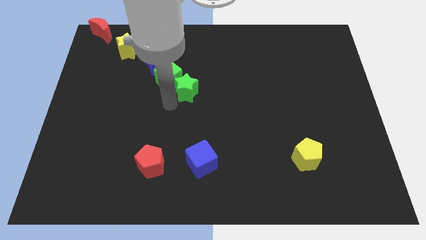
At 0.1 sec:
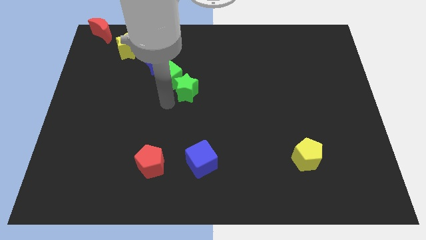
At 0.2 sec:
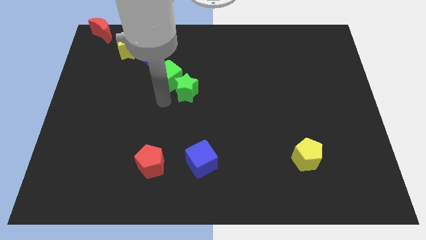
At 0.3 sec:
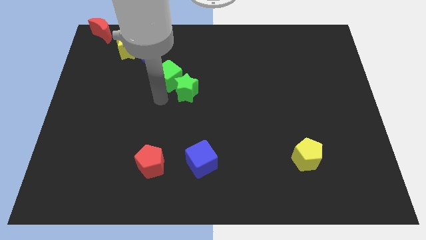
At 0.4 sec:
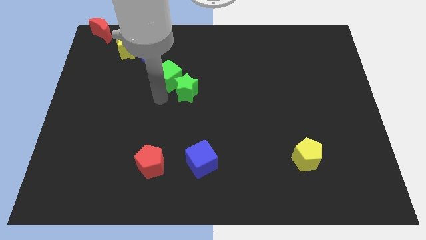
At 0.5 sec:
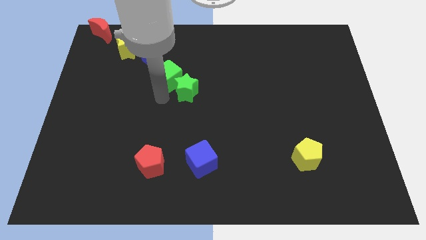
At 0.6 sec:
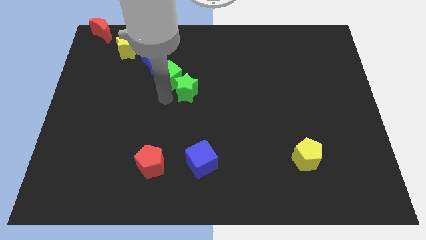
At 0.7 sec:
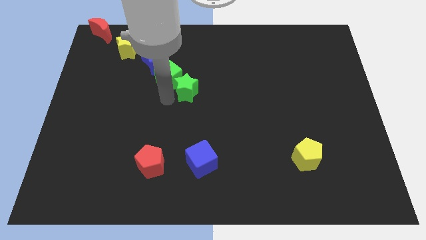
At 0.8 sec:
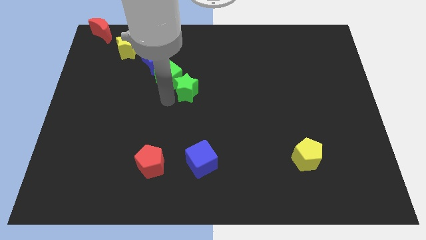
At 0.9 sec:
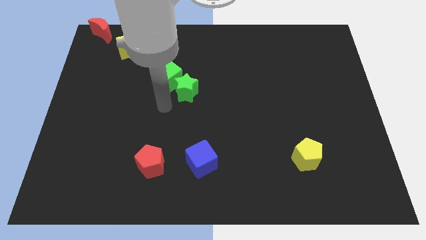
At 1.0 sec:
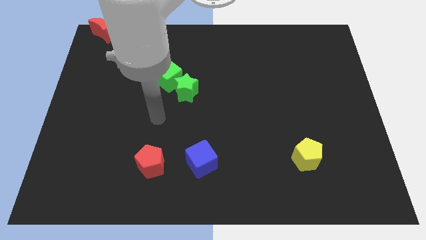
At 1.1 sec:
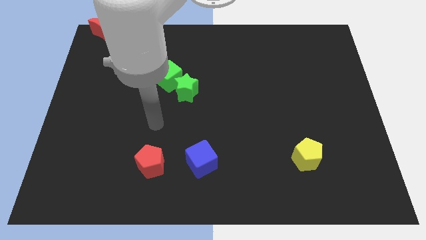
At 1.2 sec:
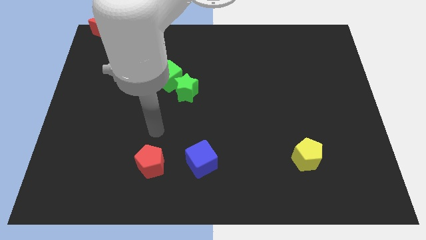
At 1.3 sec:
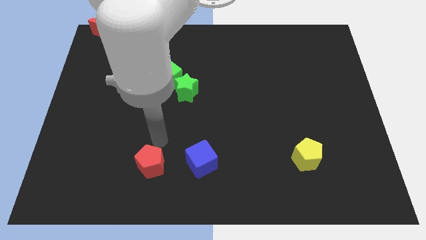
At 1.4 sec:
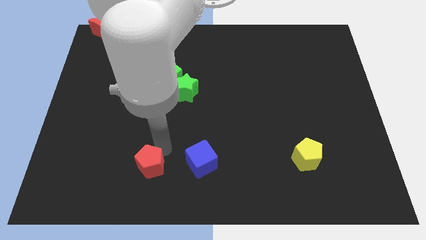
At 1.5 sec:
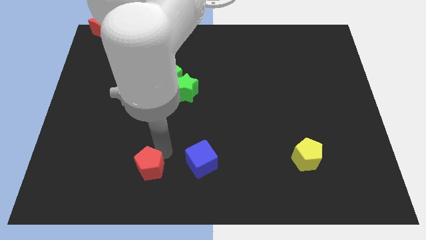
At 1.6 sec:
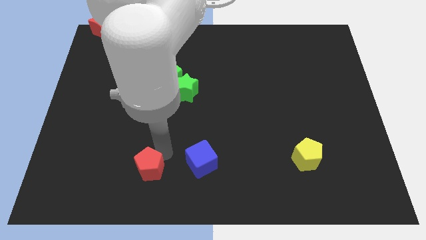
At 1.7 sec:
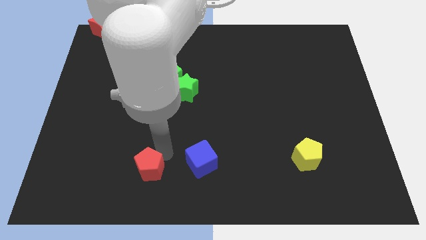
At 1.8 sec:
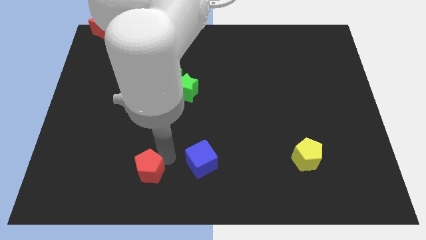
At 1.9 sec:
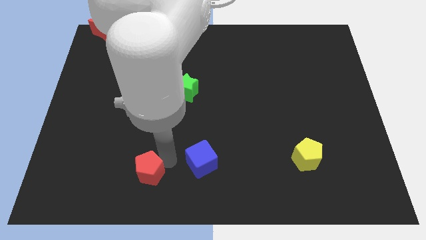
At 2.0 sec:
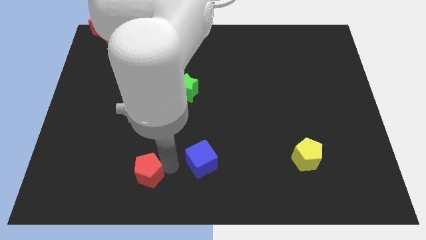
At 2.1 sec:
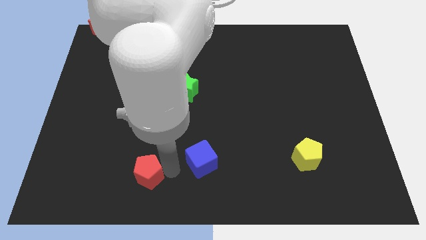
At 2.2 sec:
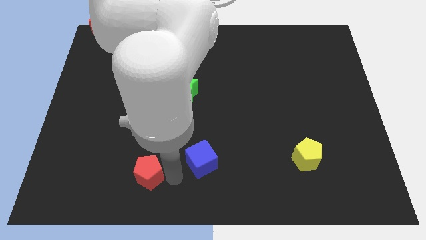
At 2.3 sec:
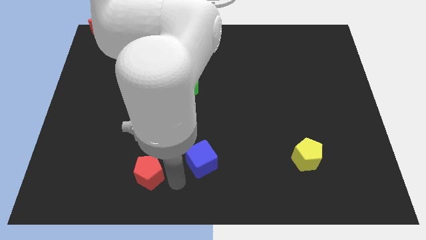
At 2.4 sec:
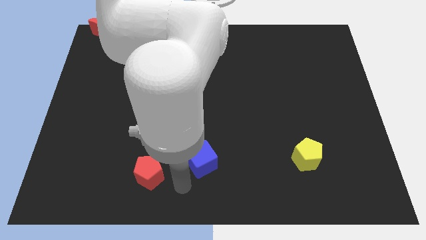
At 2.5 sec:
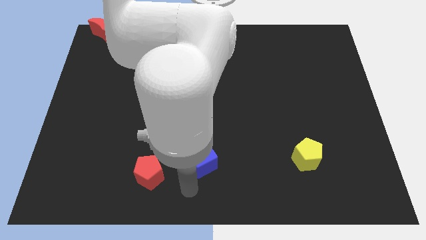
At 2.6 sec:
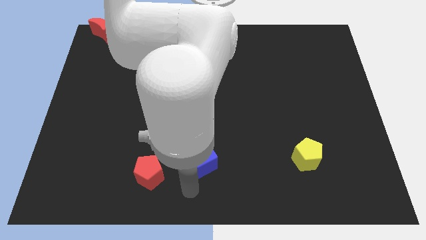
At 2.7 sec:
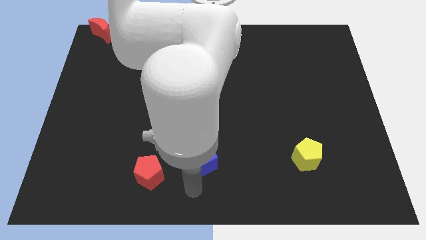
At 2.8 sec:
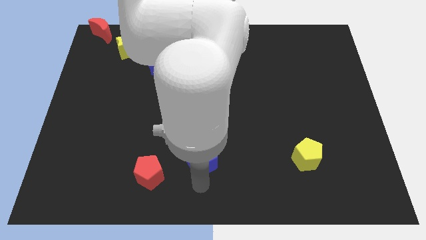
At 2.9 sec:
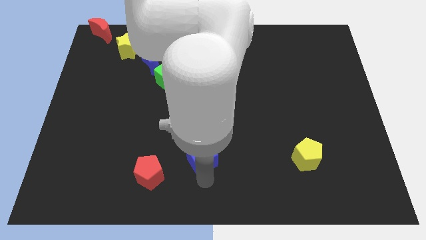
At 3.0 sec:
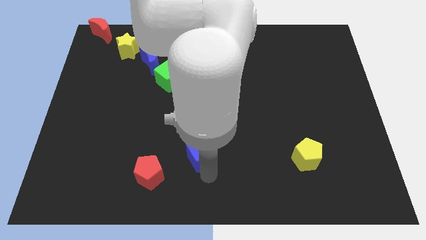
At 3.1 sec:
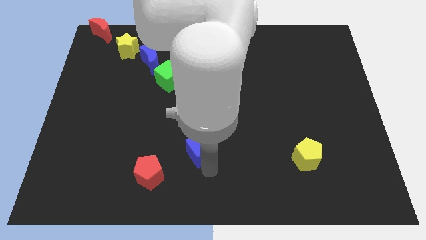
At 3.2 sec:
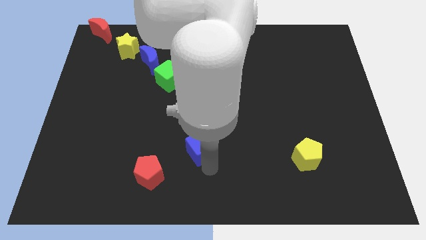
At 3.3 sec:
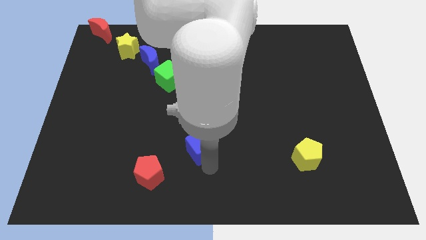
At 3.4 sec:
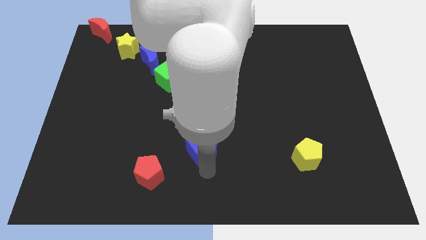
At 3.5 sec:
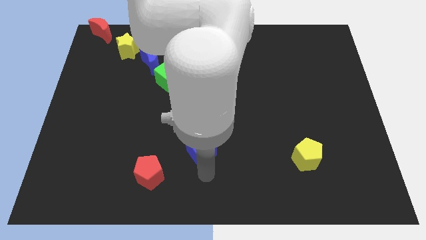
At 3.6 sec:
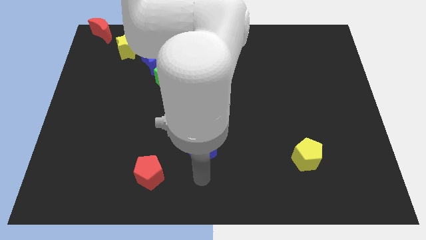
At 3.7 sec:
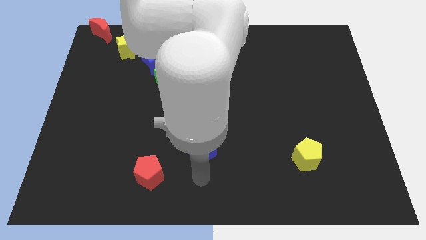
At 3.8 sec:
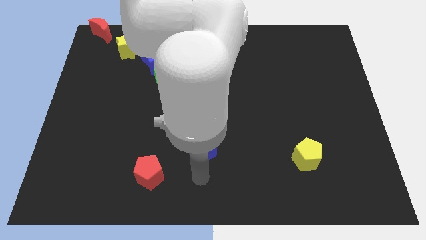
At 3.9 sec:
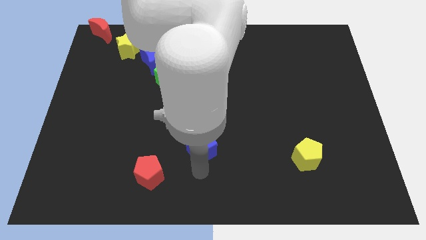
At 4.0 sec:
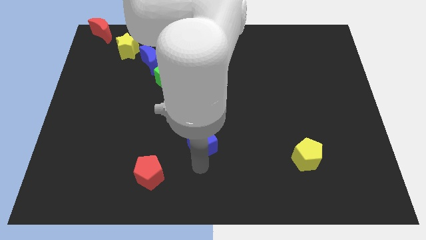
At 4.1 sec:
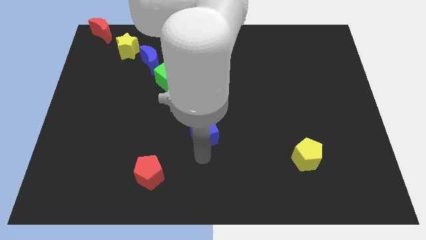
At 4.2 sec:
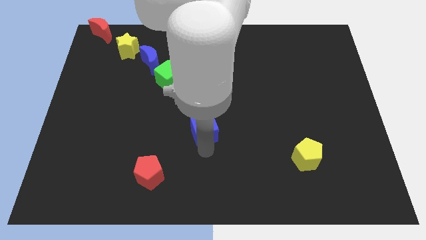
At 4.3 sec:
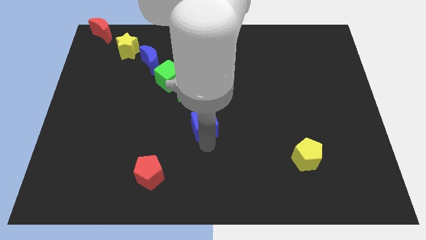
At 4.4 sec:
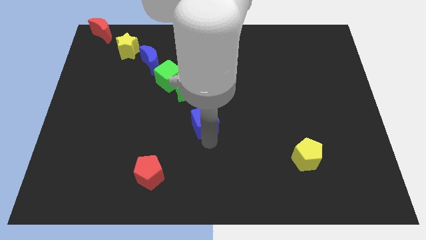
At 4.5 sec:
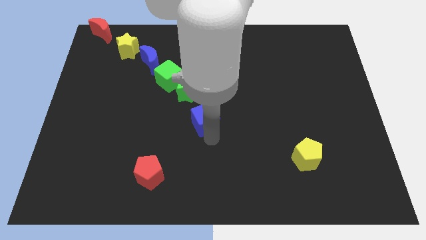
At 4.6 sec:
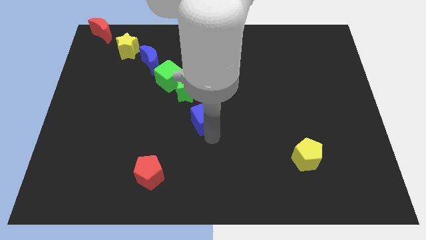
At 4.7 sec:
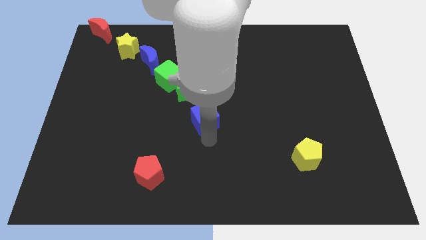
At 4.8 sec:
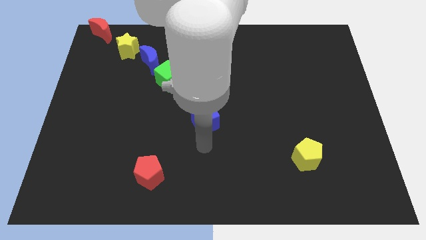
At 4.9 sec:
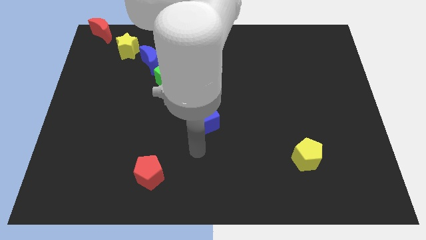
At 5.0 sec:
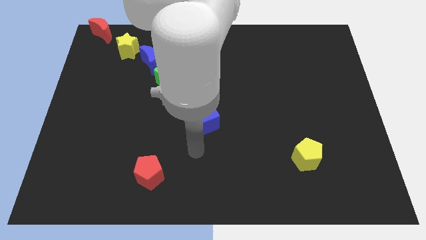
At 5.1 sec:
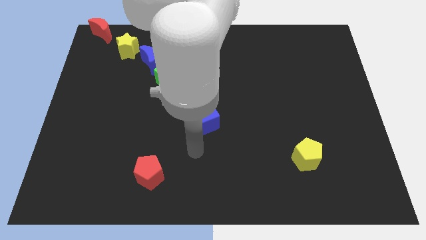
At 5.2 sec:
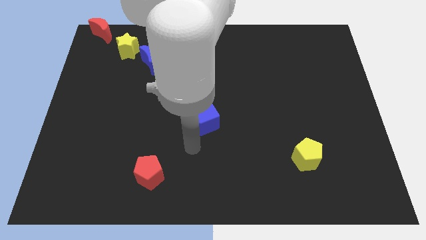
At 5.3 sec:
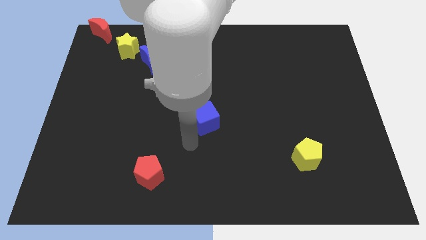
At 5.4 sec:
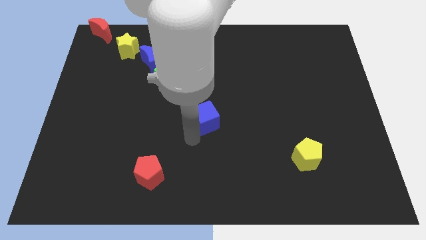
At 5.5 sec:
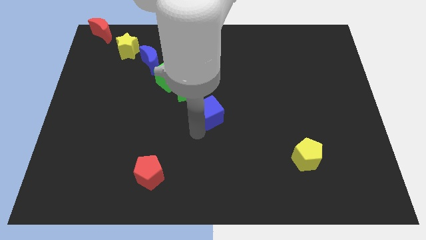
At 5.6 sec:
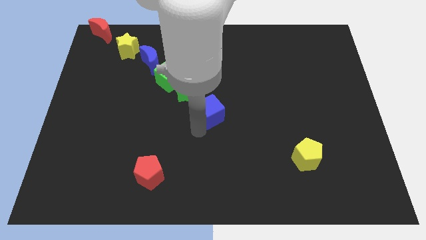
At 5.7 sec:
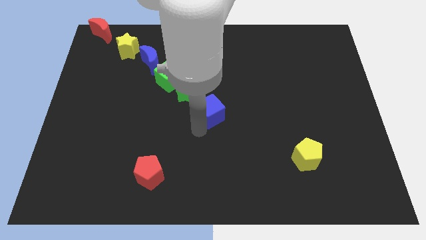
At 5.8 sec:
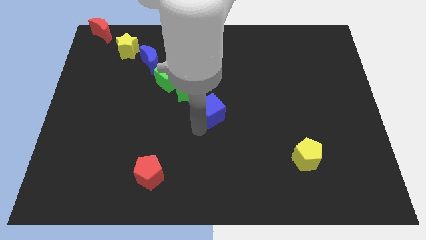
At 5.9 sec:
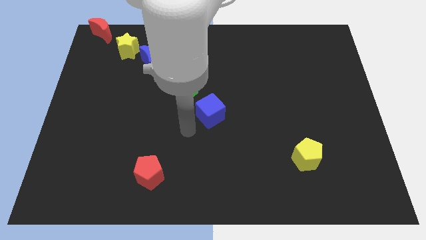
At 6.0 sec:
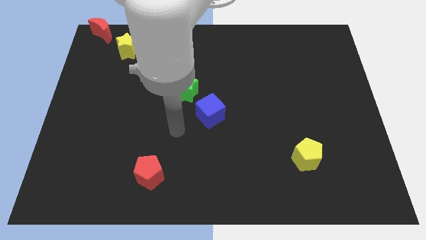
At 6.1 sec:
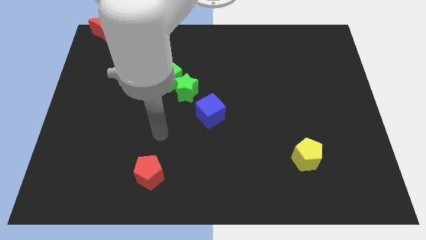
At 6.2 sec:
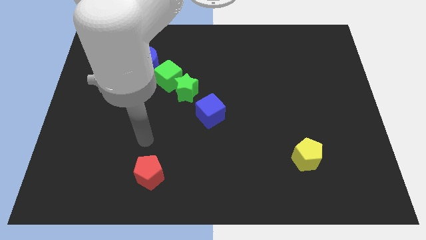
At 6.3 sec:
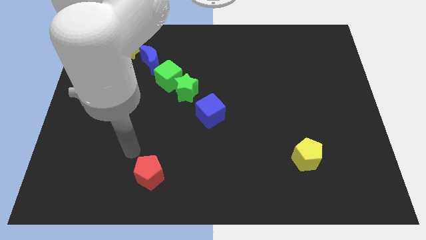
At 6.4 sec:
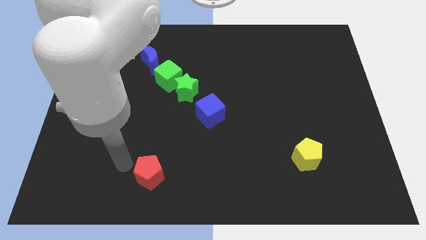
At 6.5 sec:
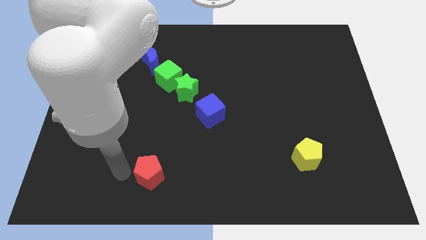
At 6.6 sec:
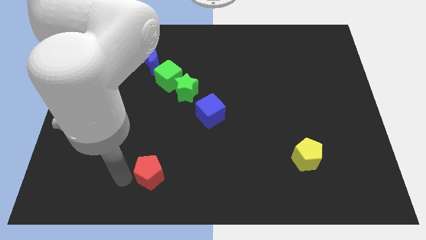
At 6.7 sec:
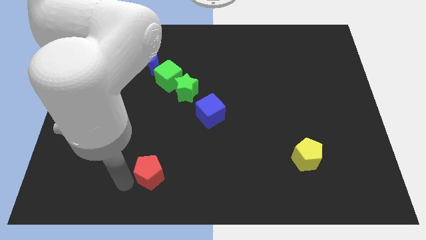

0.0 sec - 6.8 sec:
move blue cube diagonally below the green star

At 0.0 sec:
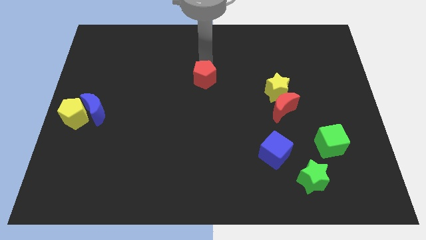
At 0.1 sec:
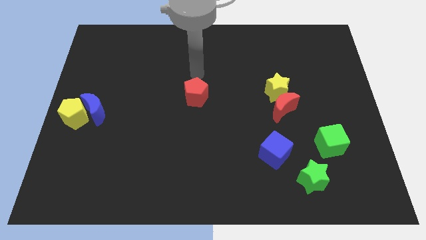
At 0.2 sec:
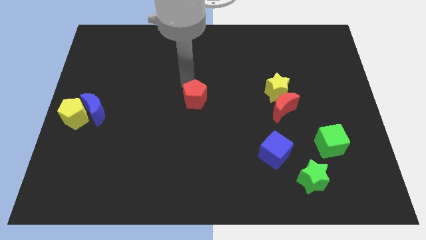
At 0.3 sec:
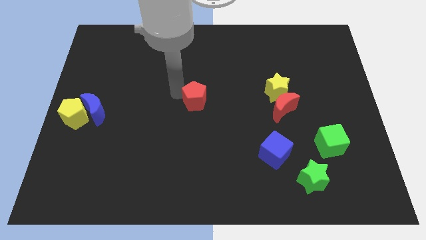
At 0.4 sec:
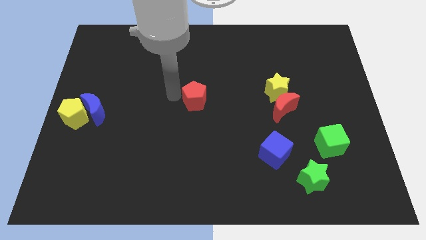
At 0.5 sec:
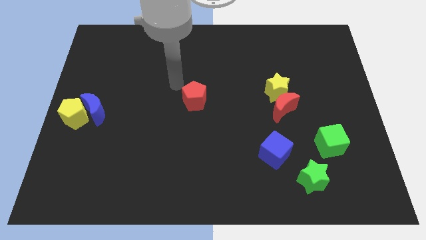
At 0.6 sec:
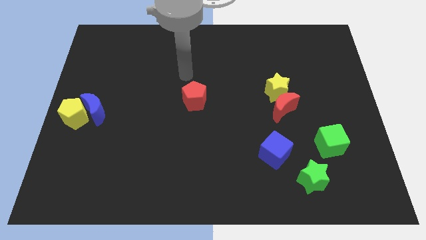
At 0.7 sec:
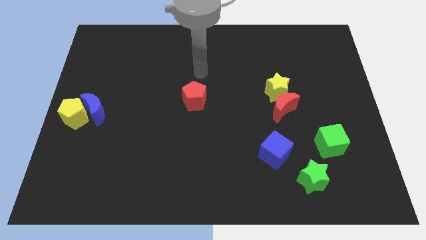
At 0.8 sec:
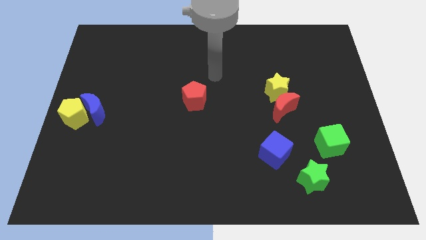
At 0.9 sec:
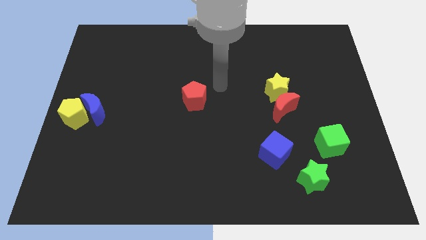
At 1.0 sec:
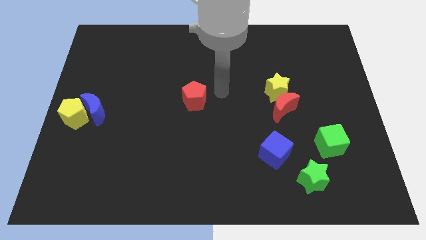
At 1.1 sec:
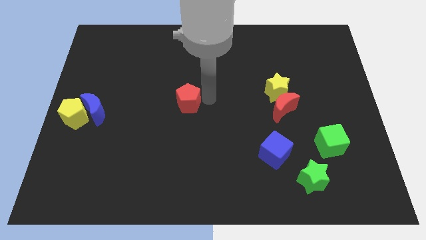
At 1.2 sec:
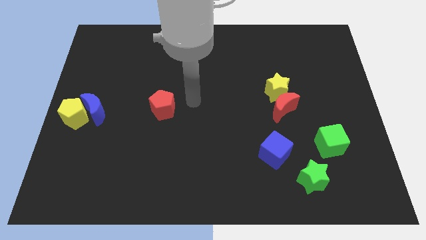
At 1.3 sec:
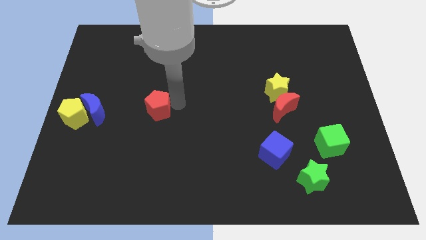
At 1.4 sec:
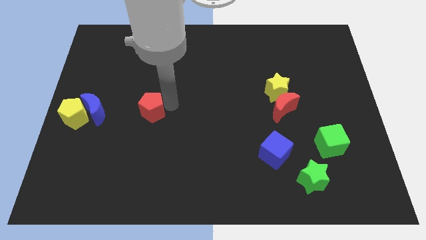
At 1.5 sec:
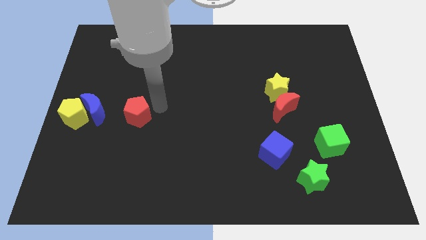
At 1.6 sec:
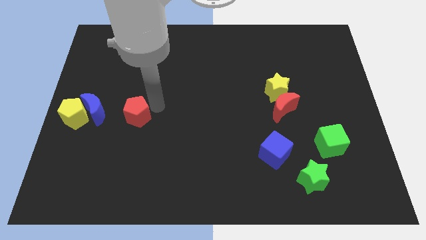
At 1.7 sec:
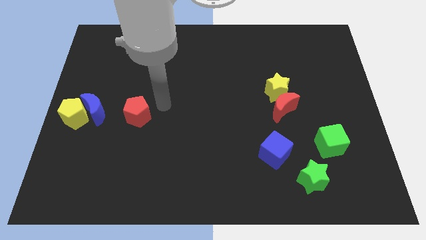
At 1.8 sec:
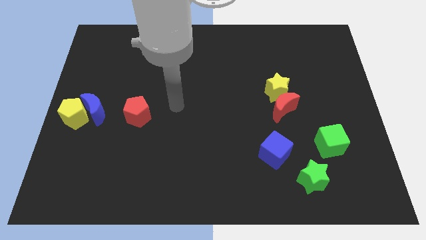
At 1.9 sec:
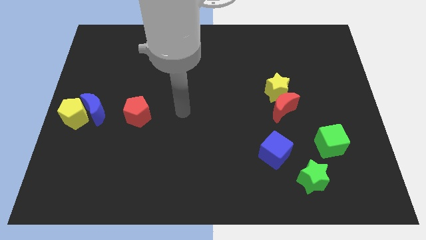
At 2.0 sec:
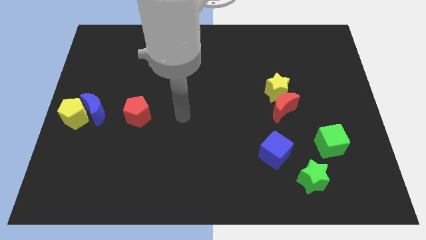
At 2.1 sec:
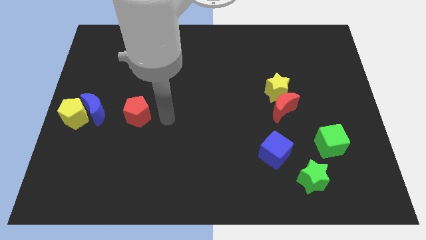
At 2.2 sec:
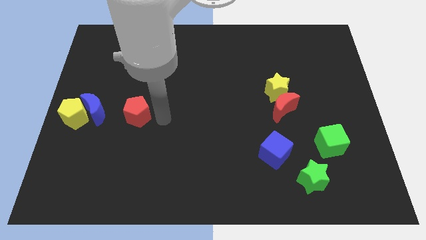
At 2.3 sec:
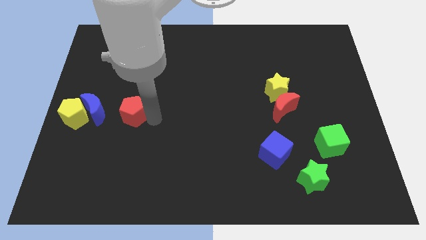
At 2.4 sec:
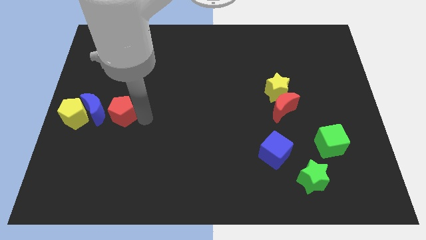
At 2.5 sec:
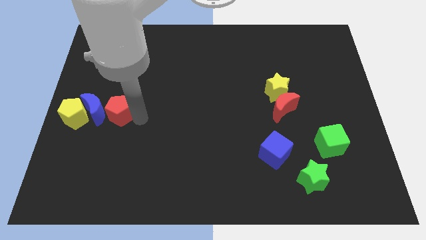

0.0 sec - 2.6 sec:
place the red pentagon to the right side of blue crescent
